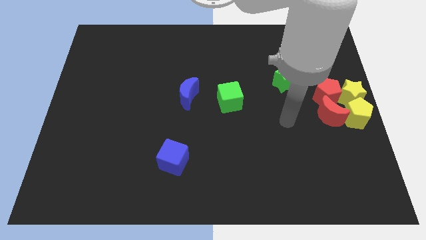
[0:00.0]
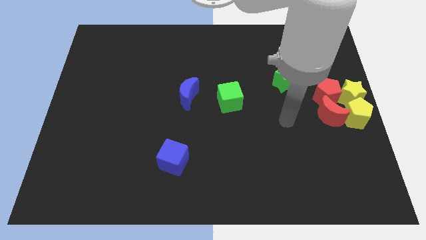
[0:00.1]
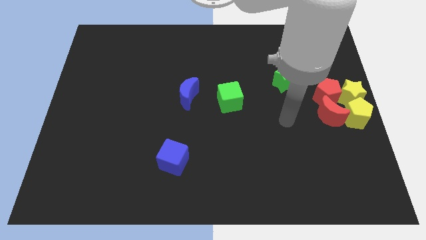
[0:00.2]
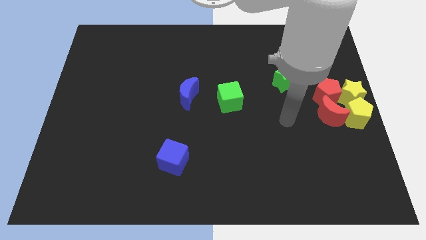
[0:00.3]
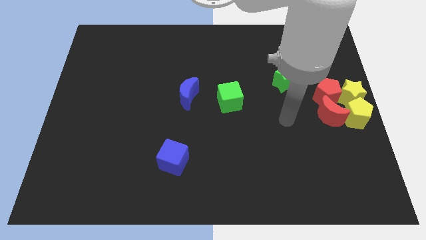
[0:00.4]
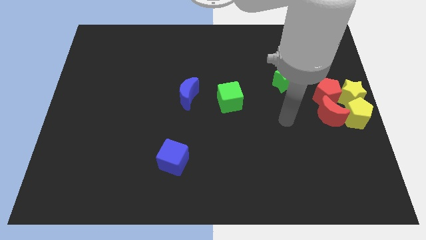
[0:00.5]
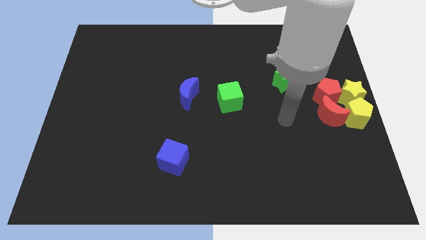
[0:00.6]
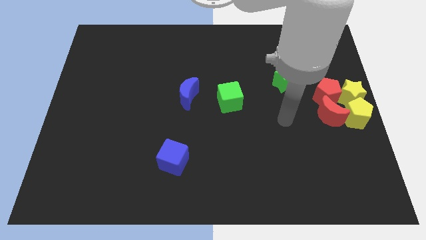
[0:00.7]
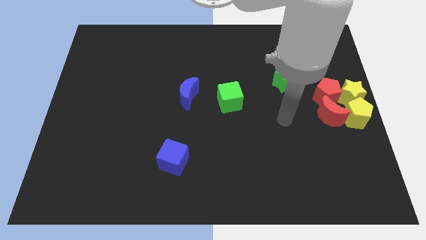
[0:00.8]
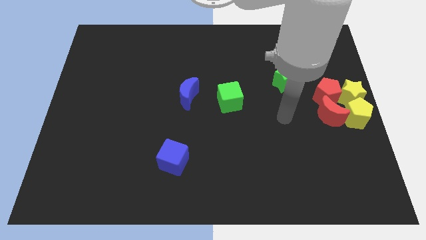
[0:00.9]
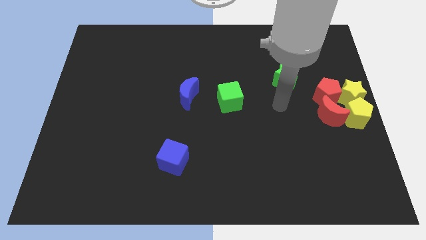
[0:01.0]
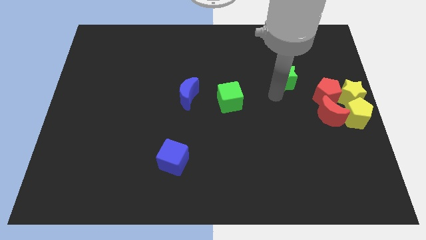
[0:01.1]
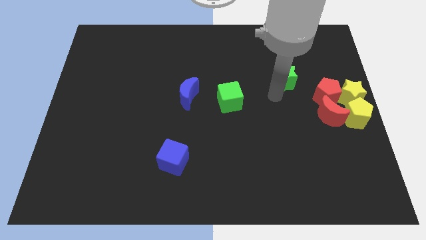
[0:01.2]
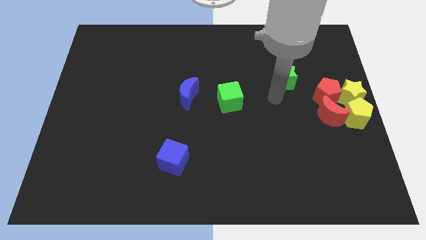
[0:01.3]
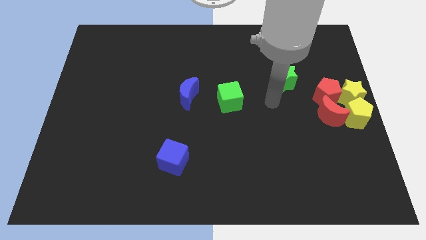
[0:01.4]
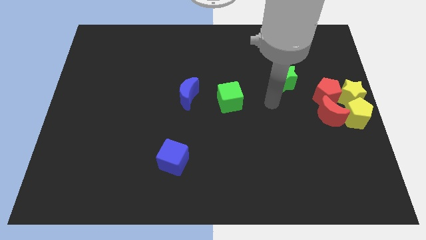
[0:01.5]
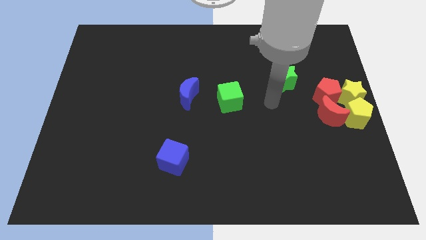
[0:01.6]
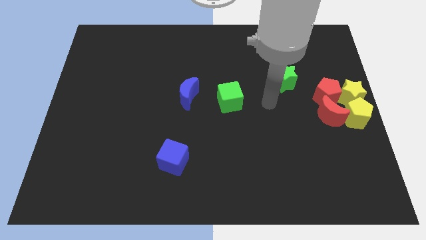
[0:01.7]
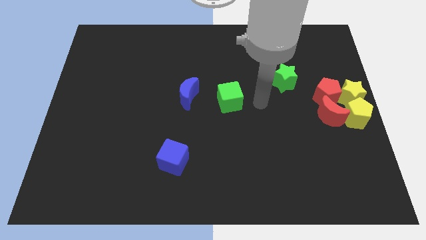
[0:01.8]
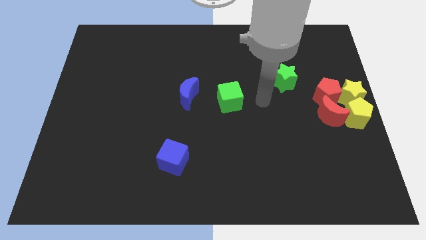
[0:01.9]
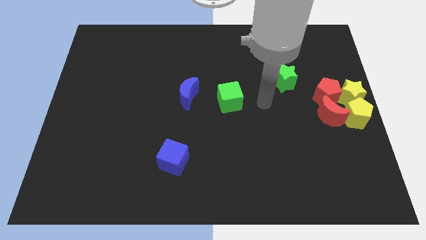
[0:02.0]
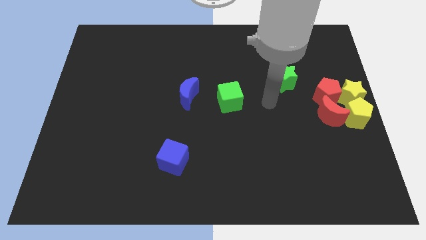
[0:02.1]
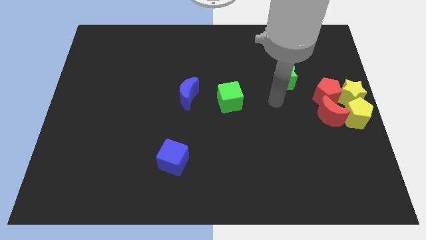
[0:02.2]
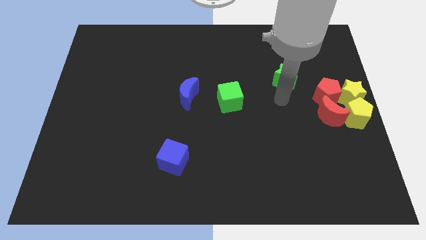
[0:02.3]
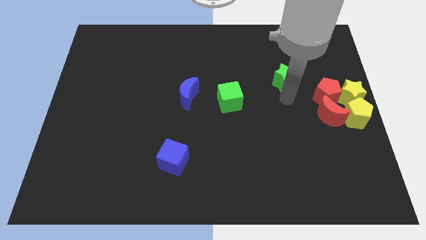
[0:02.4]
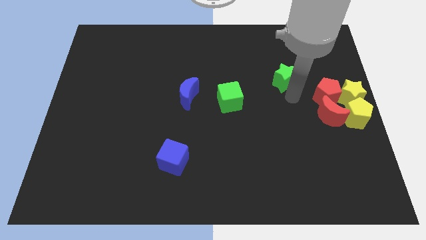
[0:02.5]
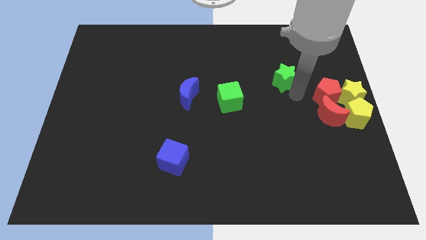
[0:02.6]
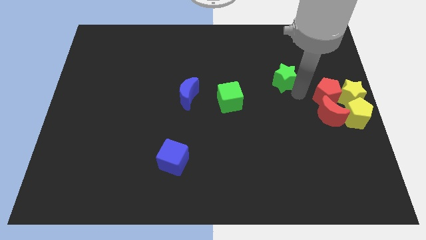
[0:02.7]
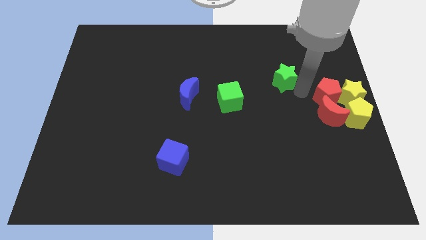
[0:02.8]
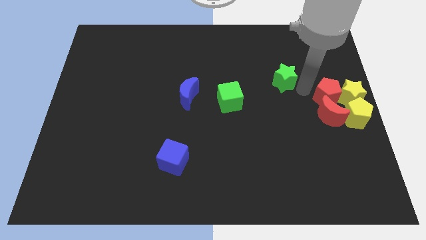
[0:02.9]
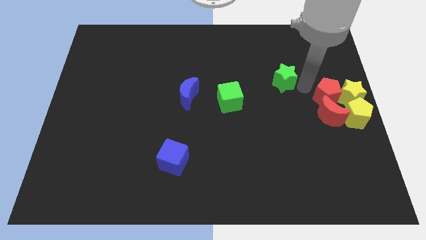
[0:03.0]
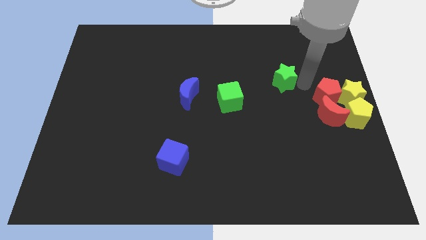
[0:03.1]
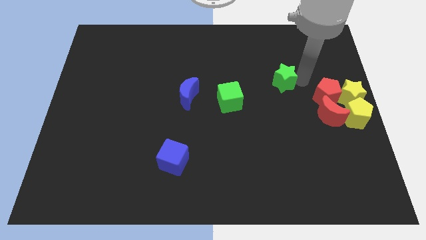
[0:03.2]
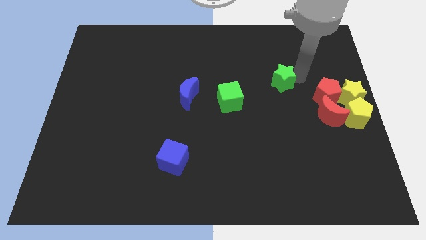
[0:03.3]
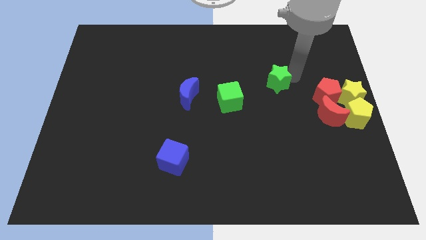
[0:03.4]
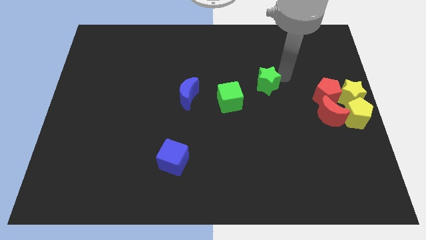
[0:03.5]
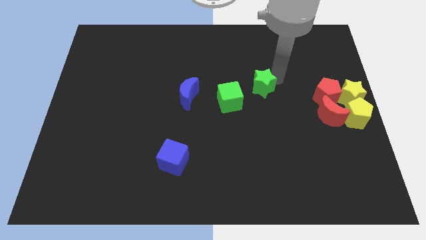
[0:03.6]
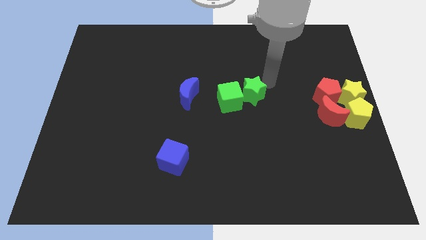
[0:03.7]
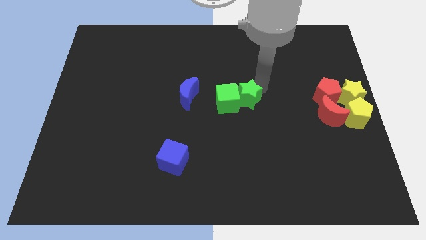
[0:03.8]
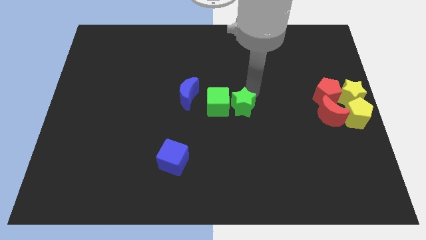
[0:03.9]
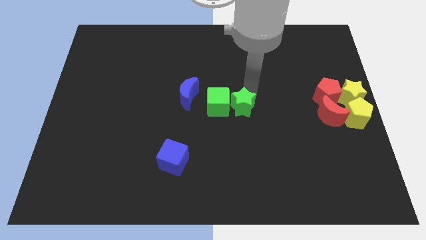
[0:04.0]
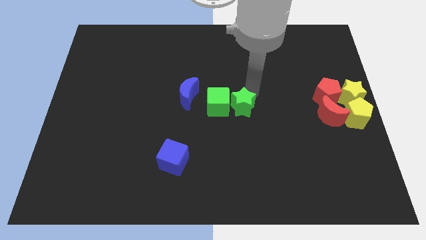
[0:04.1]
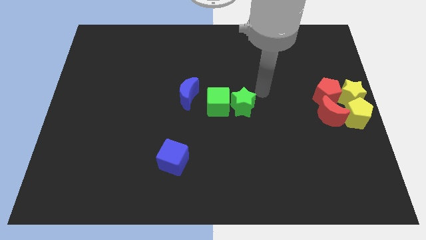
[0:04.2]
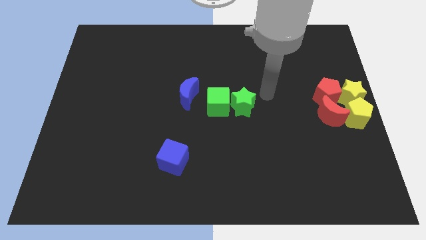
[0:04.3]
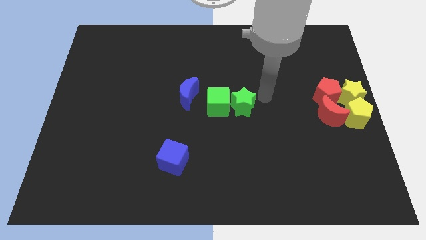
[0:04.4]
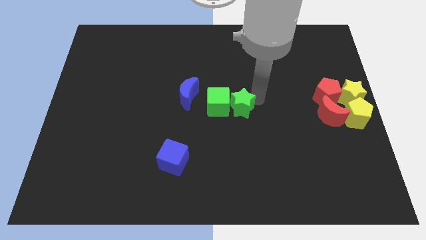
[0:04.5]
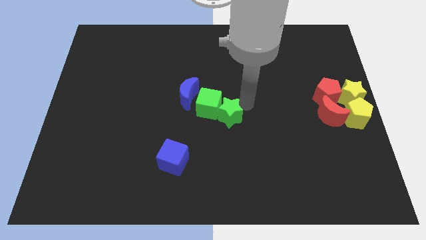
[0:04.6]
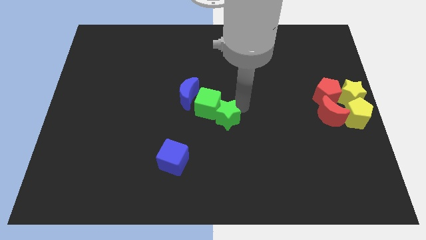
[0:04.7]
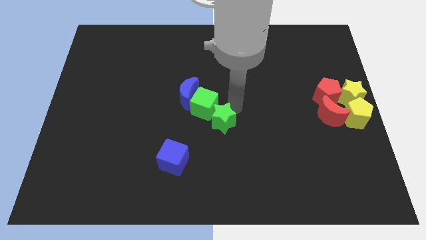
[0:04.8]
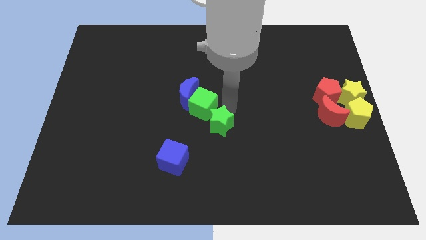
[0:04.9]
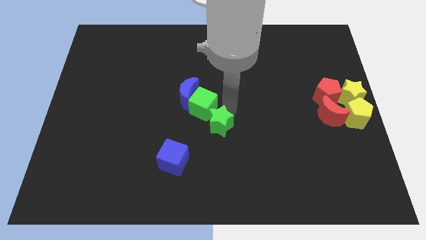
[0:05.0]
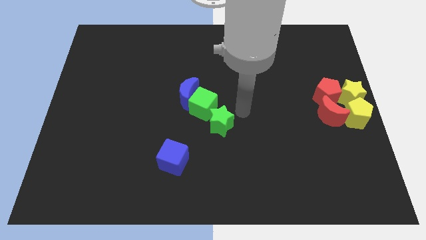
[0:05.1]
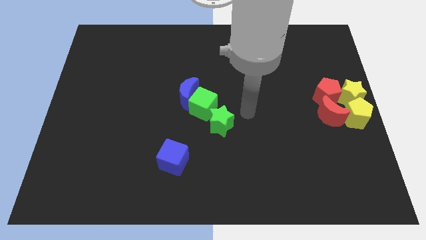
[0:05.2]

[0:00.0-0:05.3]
move the green star to the bottom right of green cube

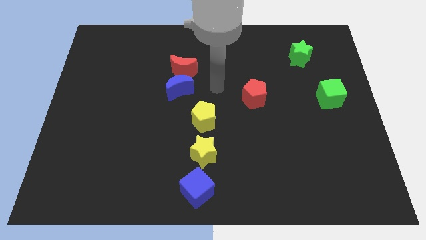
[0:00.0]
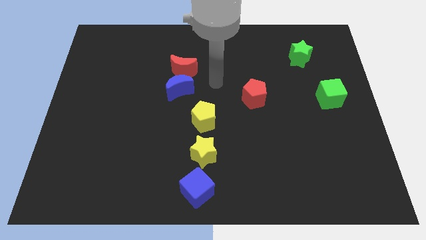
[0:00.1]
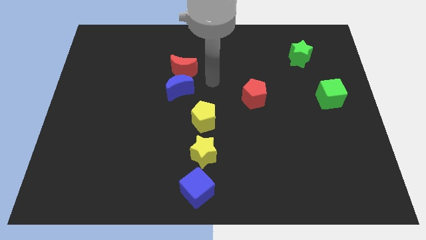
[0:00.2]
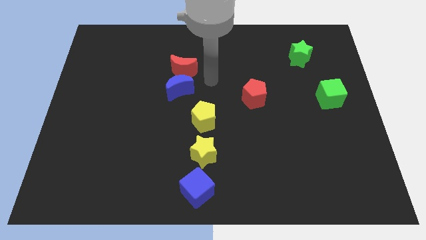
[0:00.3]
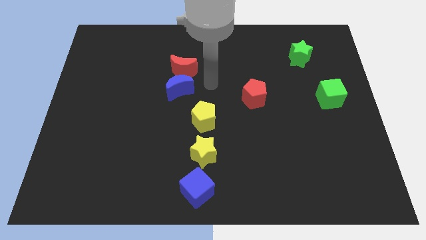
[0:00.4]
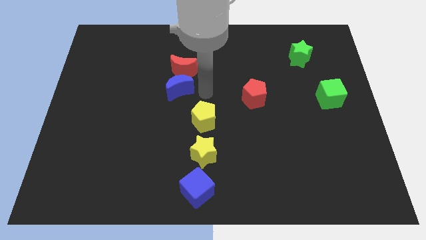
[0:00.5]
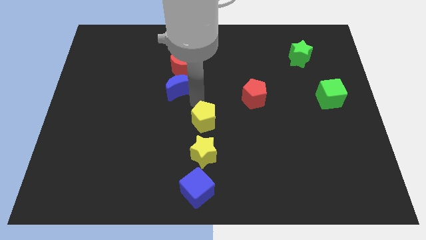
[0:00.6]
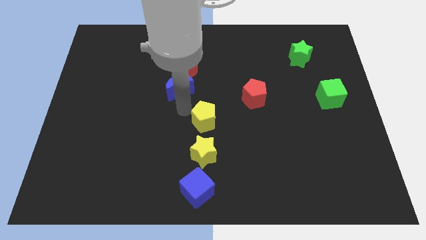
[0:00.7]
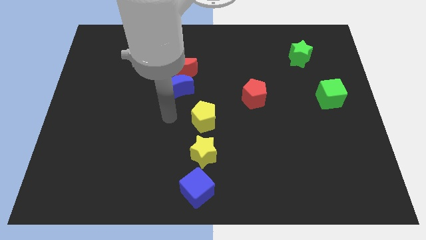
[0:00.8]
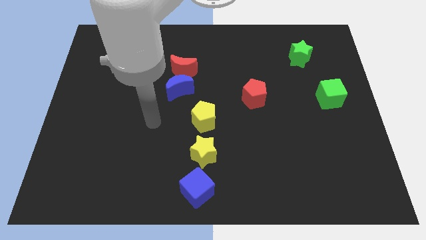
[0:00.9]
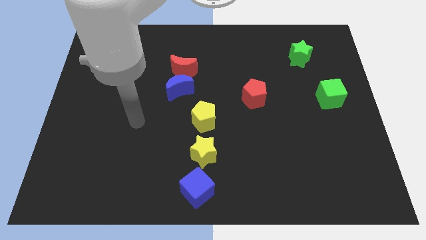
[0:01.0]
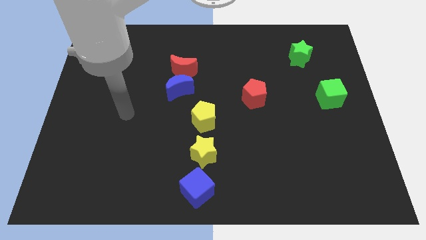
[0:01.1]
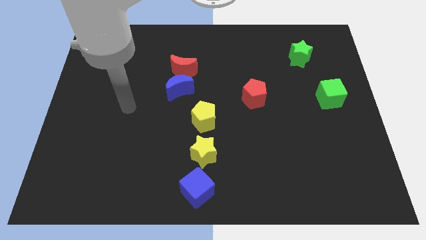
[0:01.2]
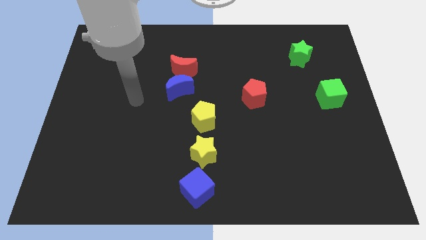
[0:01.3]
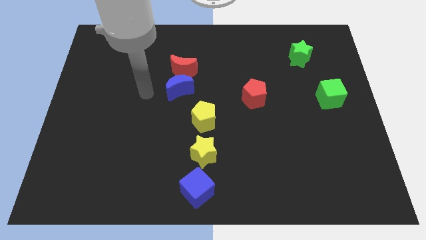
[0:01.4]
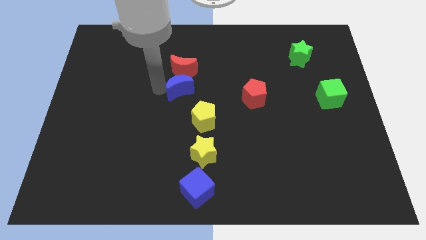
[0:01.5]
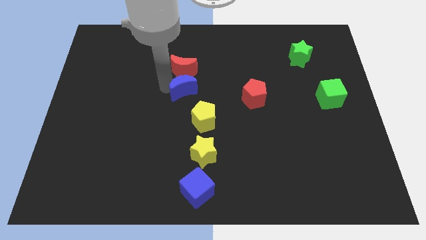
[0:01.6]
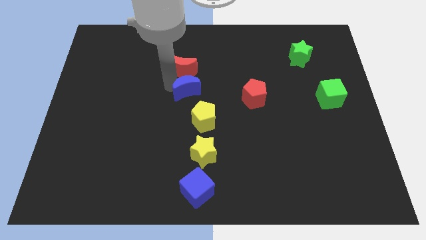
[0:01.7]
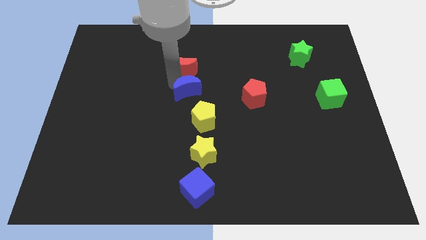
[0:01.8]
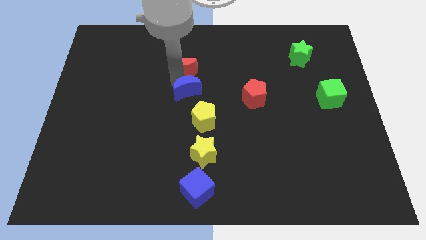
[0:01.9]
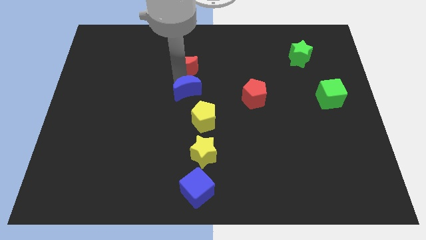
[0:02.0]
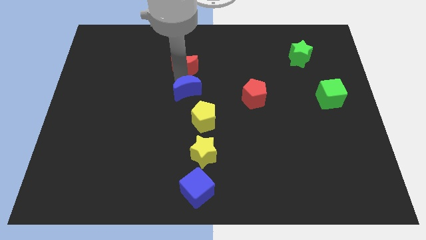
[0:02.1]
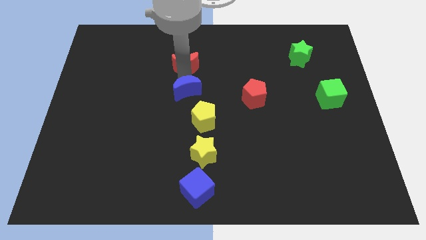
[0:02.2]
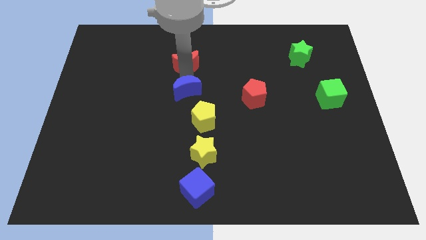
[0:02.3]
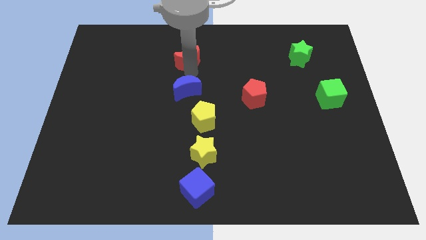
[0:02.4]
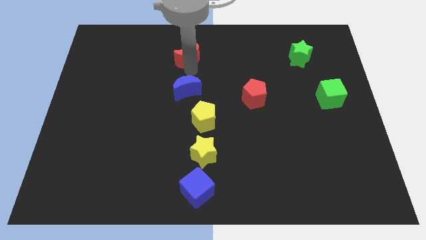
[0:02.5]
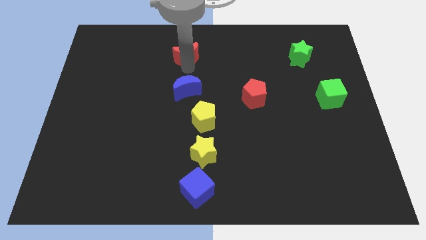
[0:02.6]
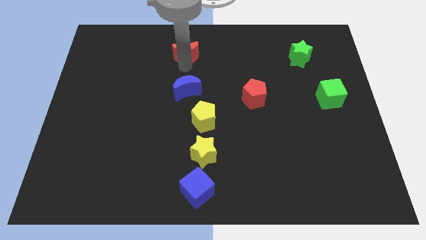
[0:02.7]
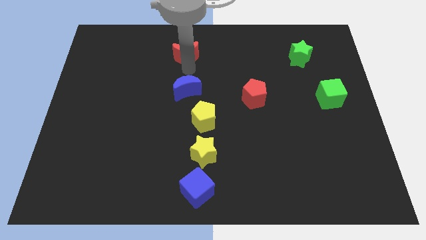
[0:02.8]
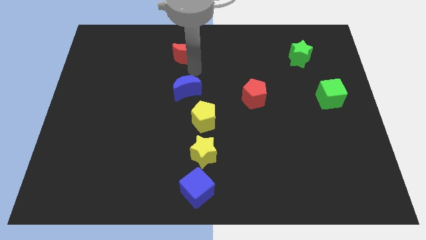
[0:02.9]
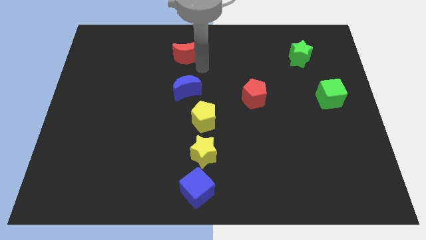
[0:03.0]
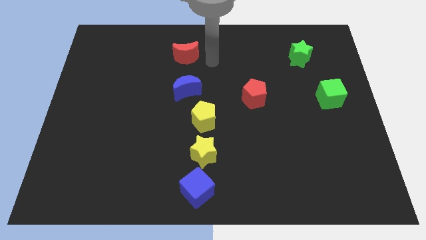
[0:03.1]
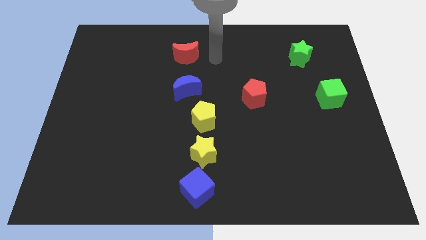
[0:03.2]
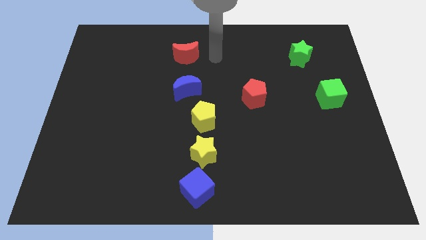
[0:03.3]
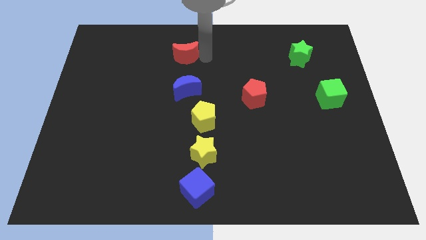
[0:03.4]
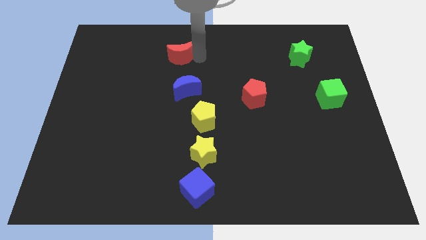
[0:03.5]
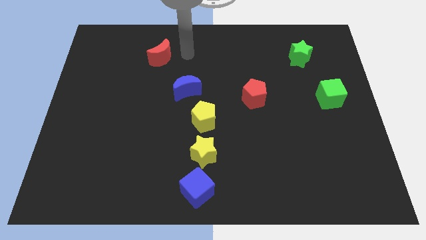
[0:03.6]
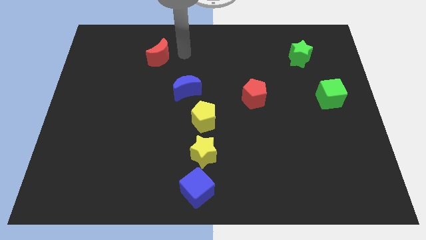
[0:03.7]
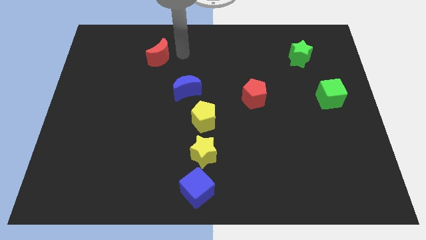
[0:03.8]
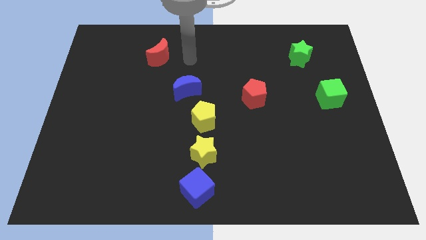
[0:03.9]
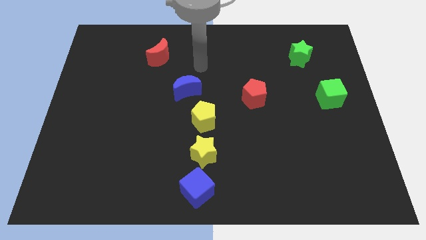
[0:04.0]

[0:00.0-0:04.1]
slide the red moon diagonally top left to the blue moon
